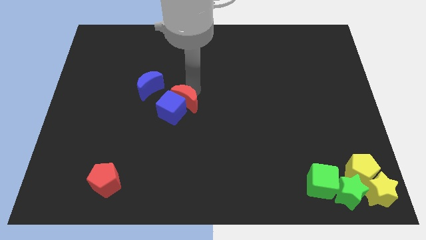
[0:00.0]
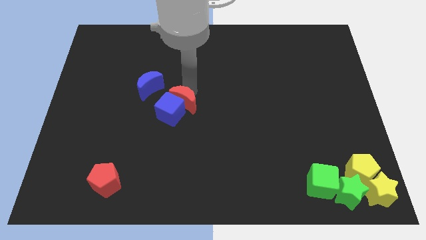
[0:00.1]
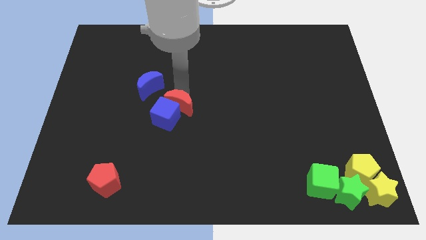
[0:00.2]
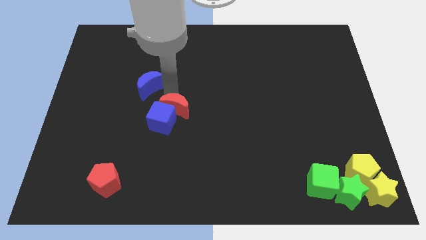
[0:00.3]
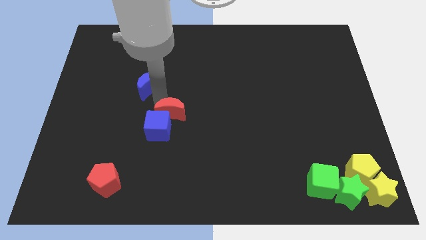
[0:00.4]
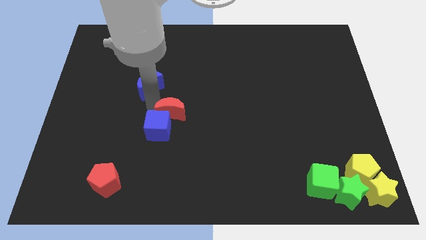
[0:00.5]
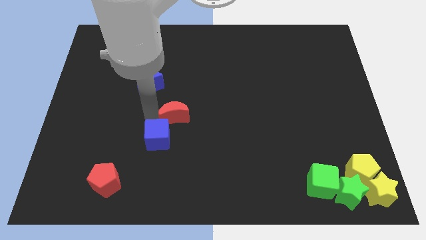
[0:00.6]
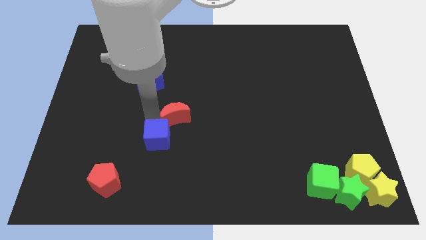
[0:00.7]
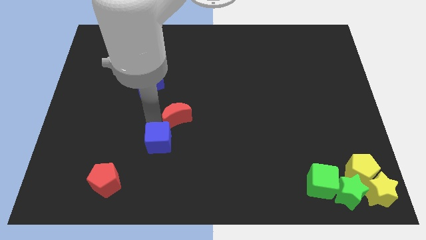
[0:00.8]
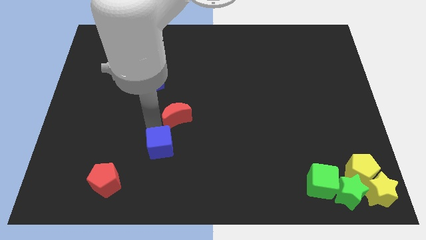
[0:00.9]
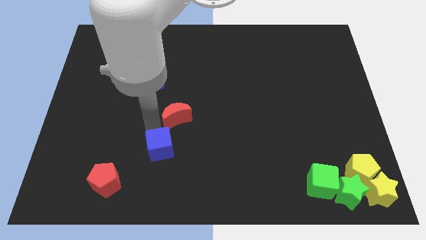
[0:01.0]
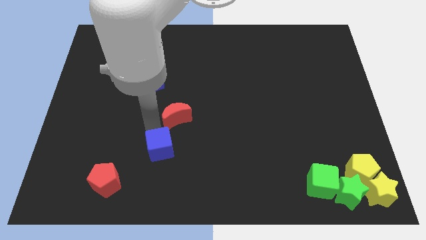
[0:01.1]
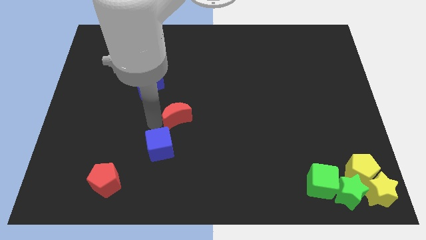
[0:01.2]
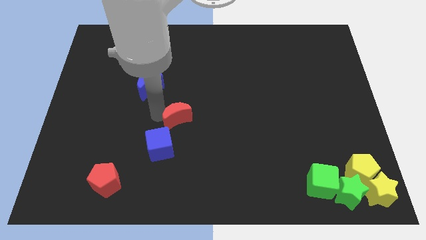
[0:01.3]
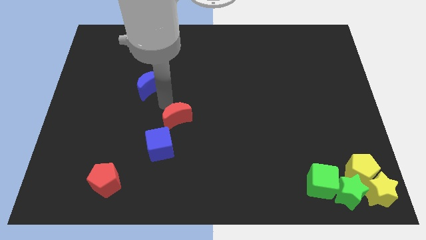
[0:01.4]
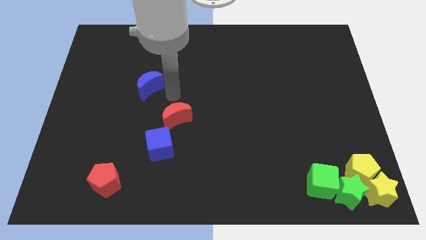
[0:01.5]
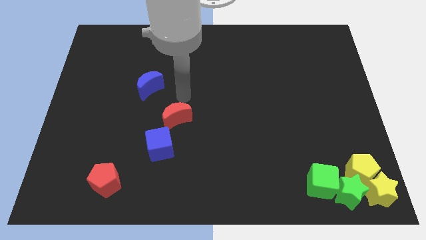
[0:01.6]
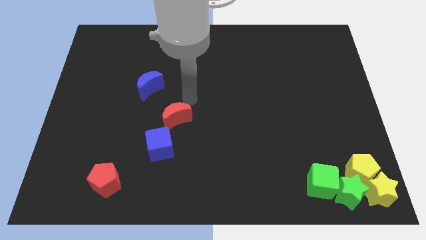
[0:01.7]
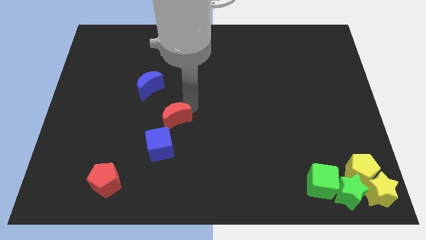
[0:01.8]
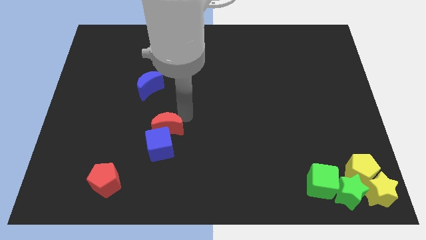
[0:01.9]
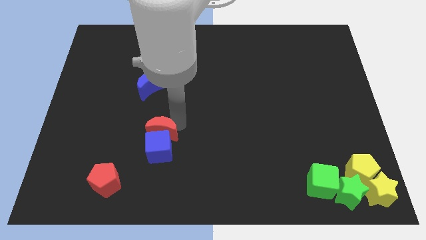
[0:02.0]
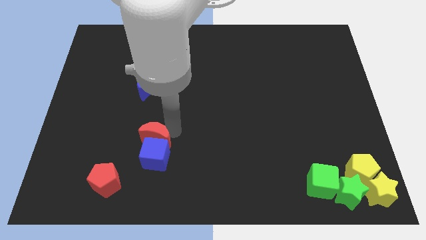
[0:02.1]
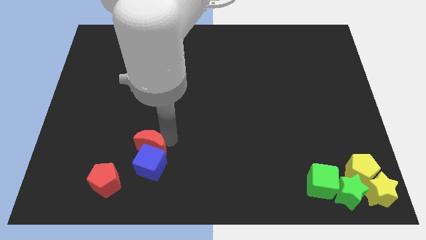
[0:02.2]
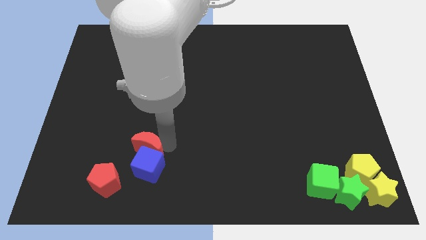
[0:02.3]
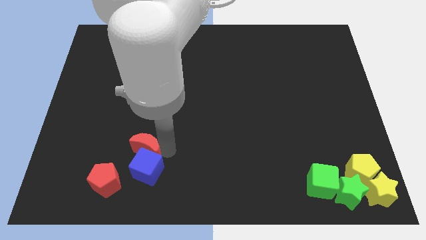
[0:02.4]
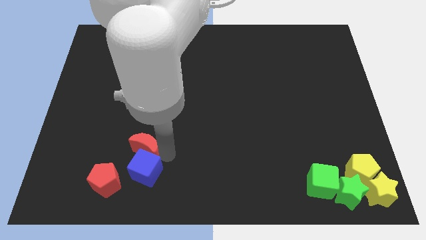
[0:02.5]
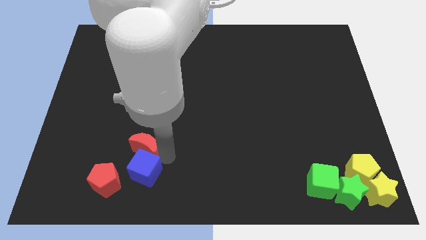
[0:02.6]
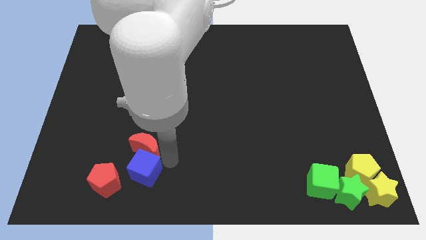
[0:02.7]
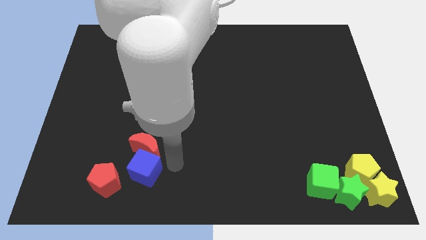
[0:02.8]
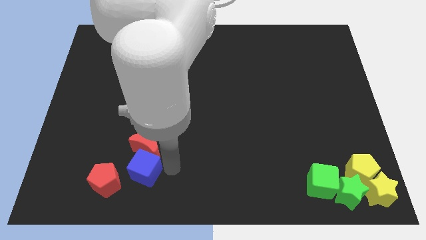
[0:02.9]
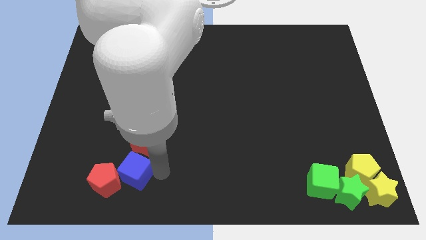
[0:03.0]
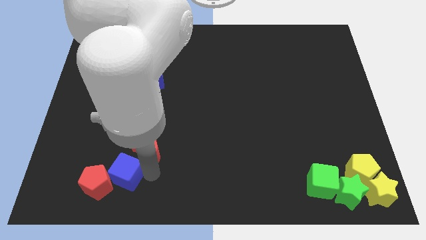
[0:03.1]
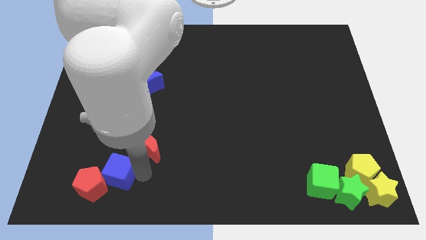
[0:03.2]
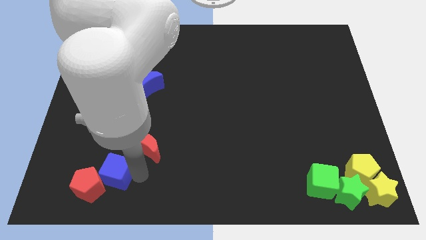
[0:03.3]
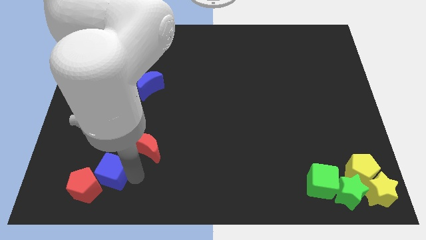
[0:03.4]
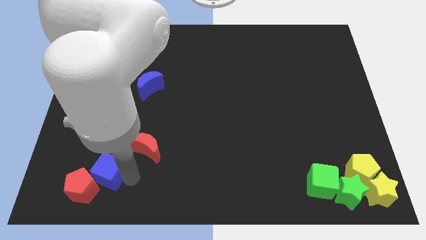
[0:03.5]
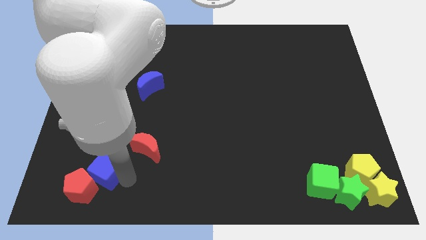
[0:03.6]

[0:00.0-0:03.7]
place the blue cube at the top right of the red pentagon

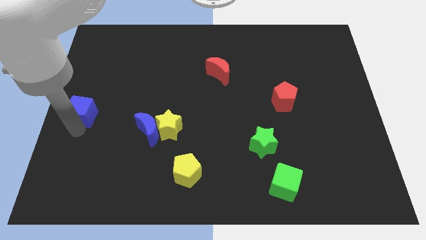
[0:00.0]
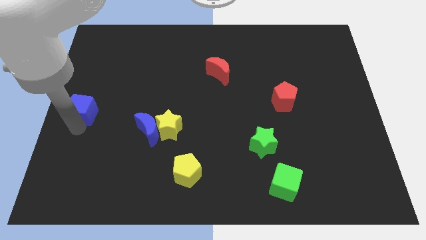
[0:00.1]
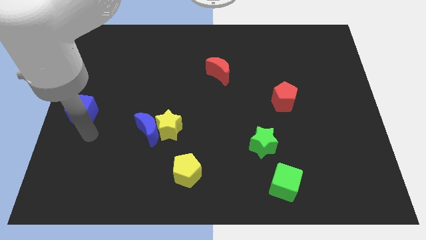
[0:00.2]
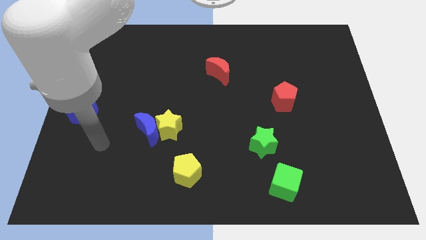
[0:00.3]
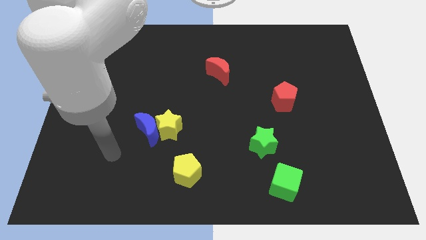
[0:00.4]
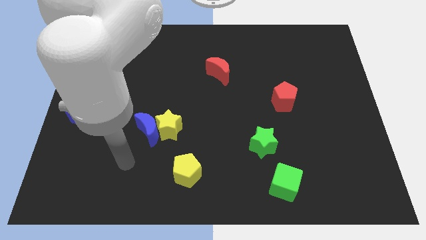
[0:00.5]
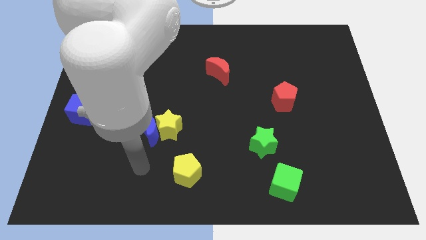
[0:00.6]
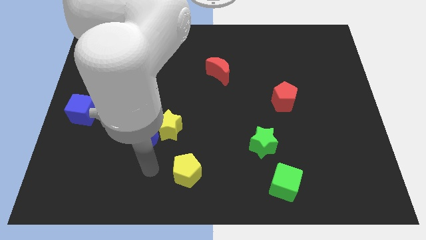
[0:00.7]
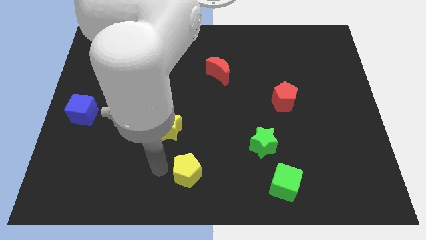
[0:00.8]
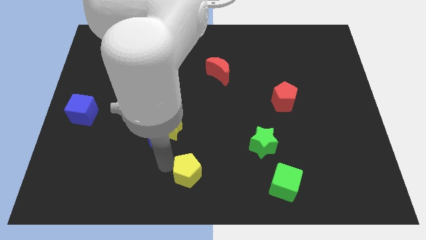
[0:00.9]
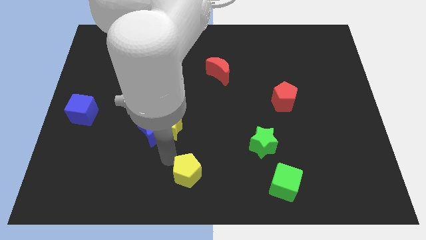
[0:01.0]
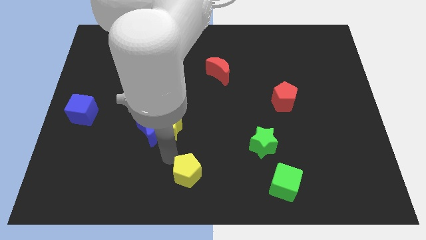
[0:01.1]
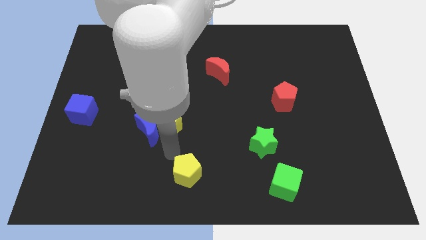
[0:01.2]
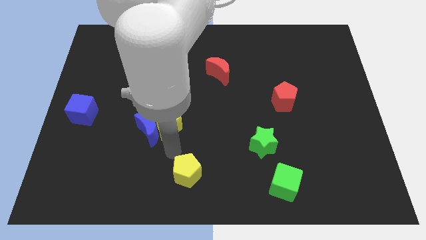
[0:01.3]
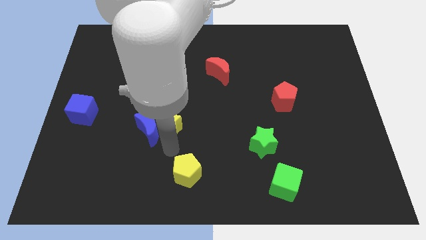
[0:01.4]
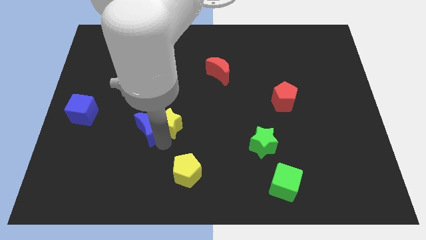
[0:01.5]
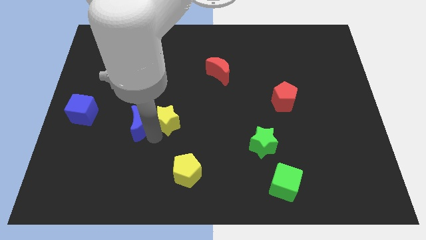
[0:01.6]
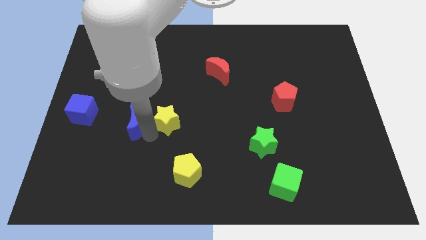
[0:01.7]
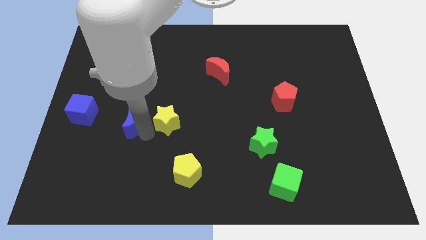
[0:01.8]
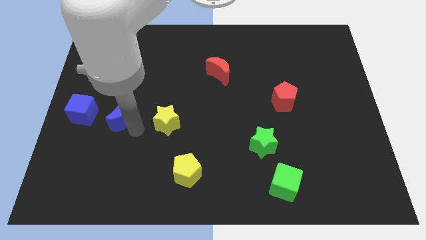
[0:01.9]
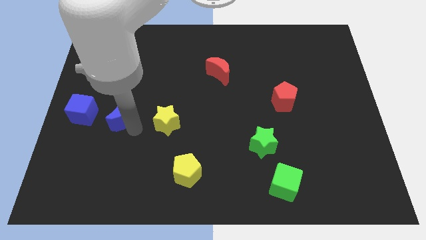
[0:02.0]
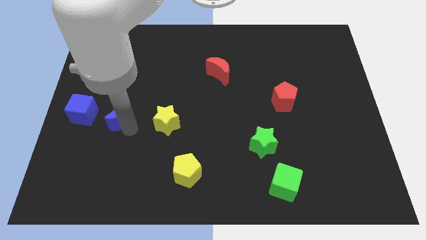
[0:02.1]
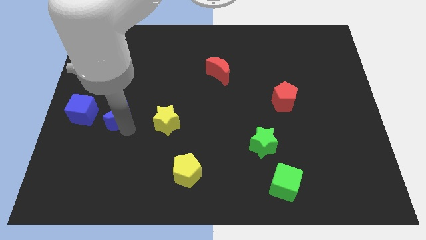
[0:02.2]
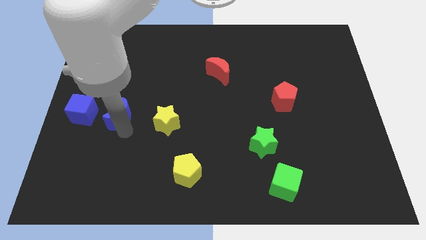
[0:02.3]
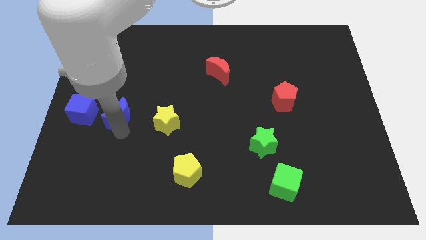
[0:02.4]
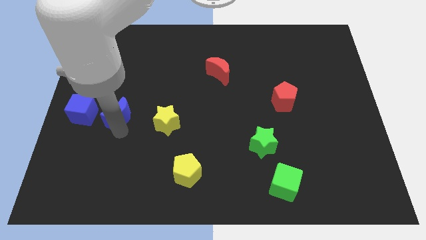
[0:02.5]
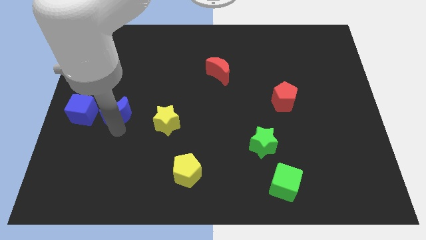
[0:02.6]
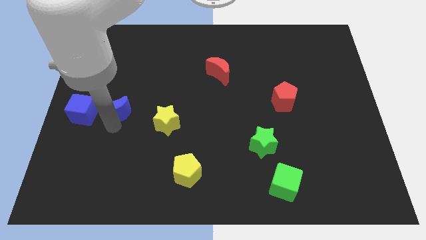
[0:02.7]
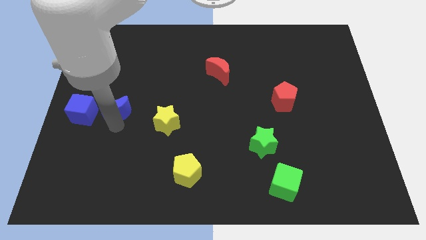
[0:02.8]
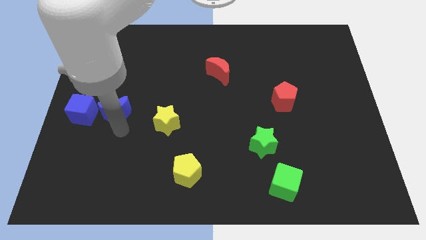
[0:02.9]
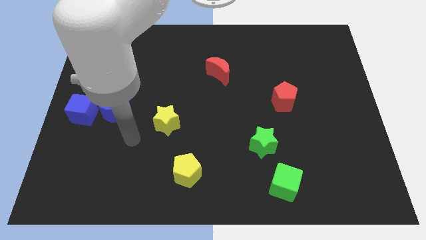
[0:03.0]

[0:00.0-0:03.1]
slide the blue moon to the right side of the blue cube

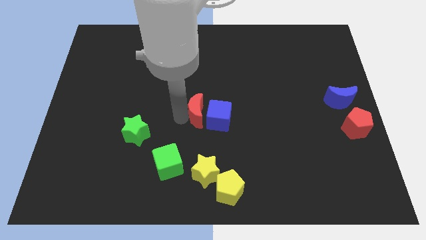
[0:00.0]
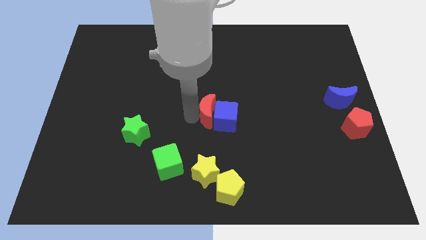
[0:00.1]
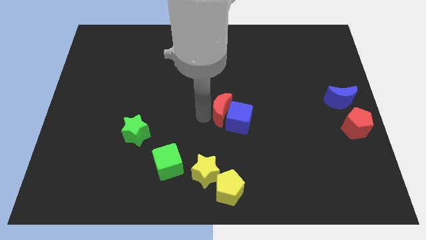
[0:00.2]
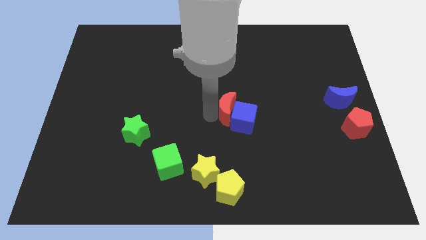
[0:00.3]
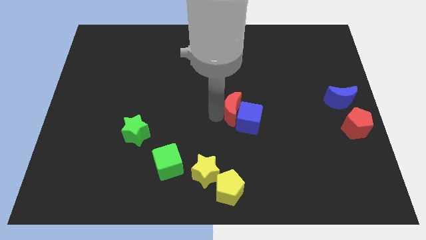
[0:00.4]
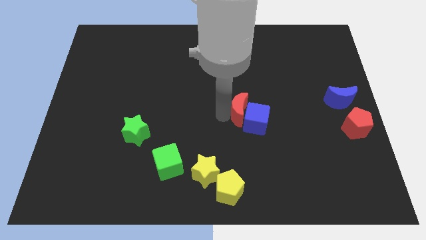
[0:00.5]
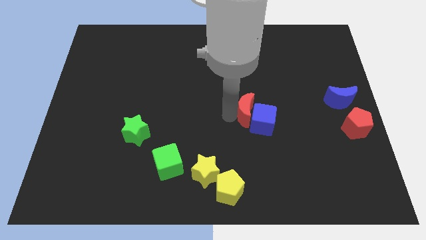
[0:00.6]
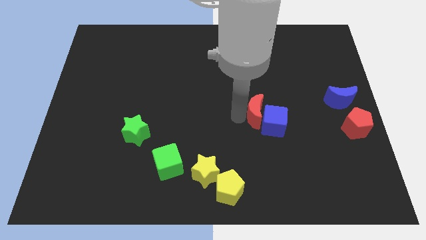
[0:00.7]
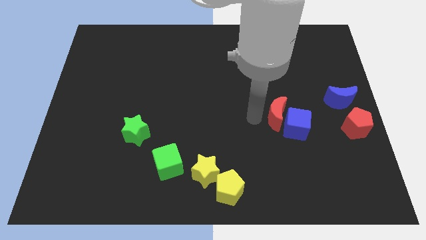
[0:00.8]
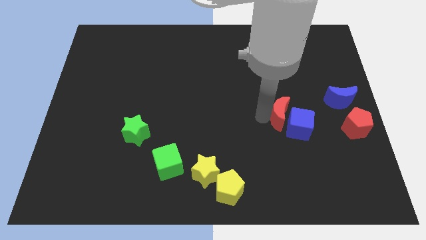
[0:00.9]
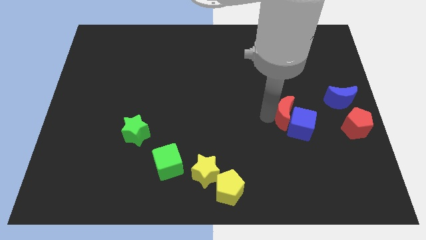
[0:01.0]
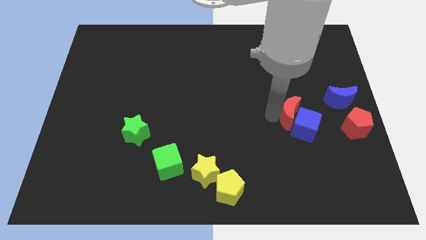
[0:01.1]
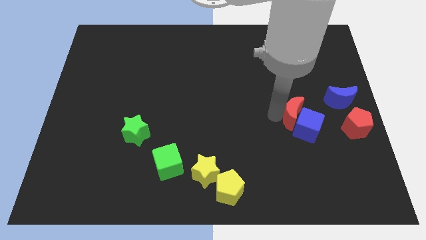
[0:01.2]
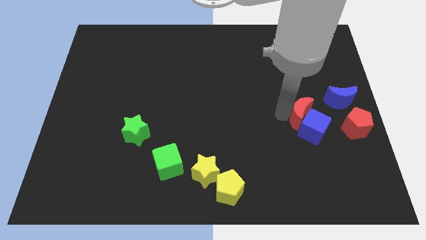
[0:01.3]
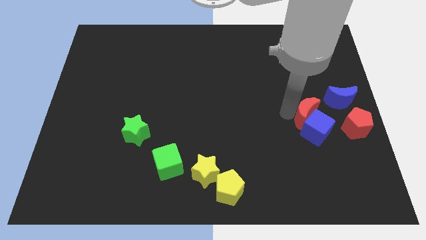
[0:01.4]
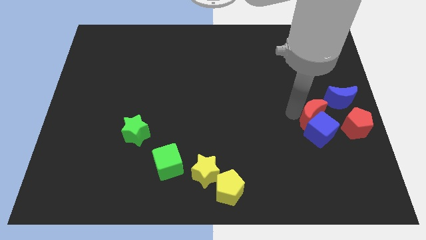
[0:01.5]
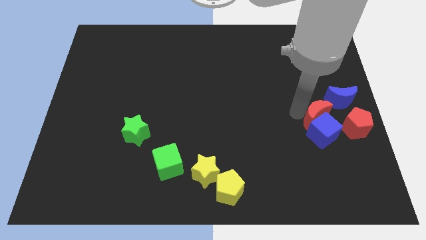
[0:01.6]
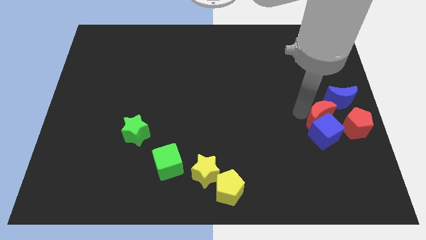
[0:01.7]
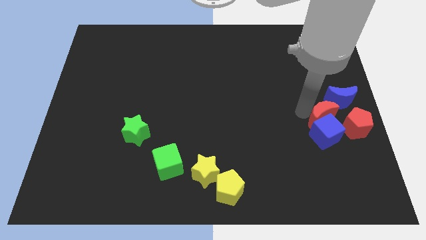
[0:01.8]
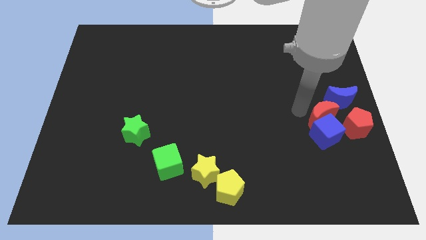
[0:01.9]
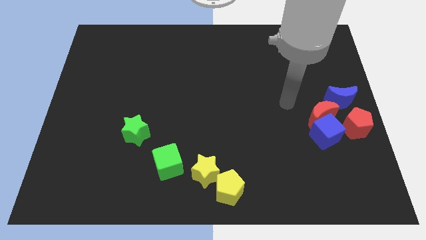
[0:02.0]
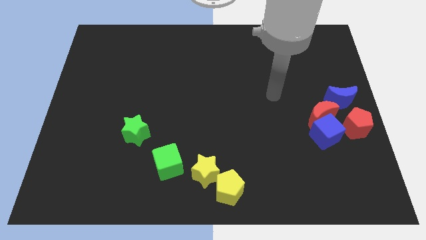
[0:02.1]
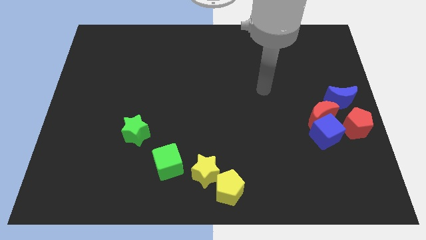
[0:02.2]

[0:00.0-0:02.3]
push red crescent into the blue cube
